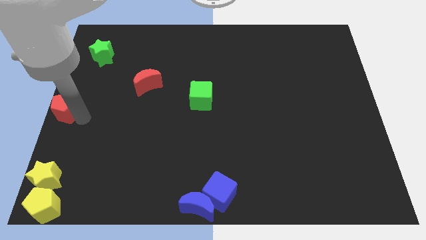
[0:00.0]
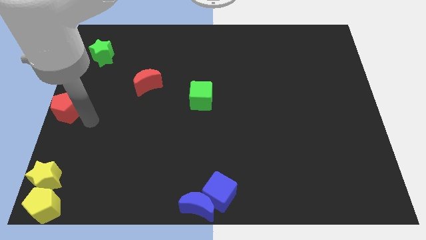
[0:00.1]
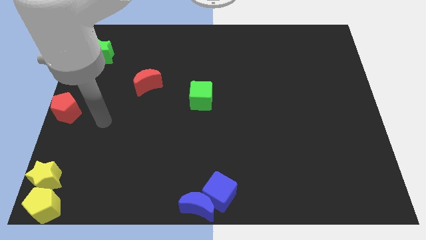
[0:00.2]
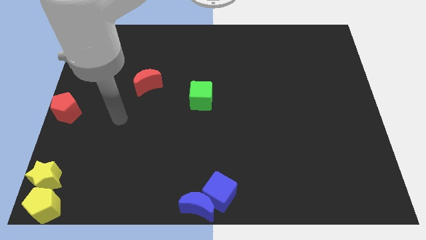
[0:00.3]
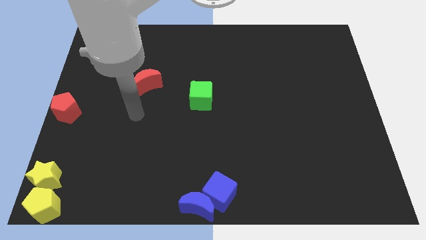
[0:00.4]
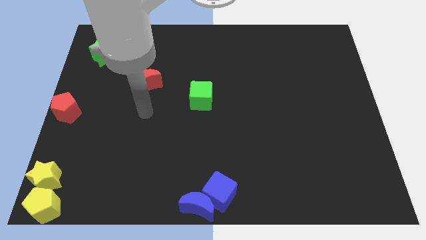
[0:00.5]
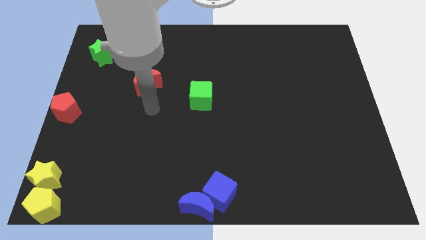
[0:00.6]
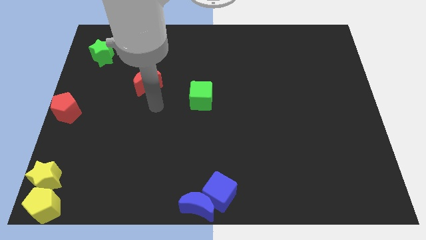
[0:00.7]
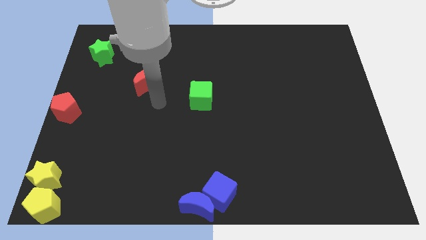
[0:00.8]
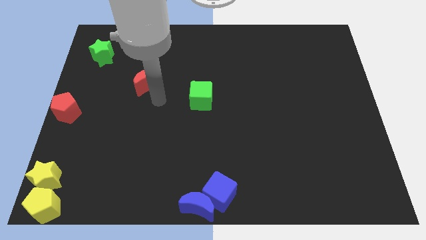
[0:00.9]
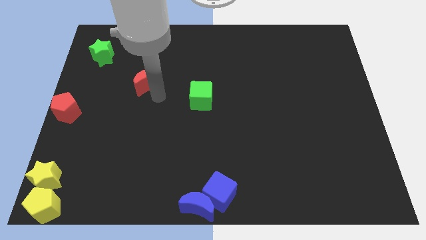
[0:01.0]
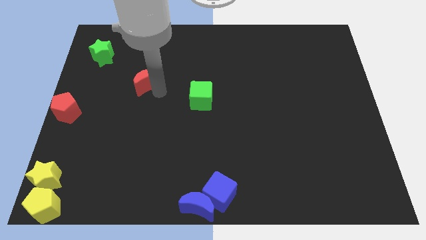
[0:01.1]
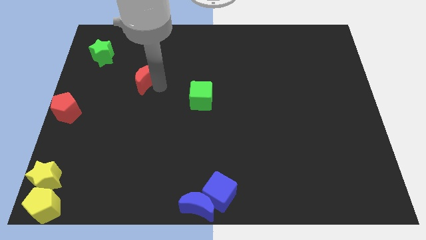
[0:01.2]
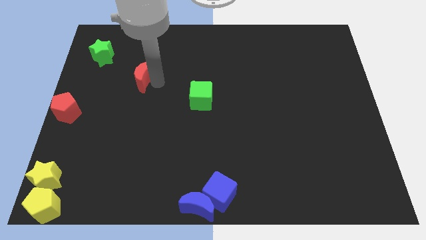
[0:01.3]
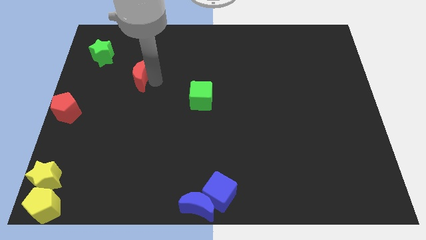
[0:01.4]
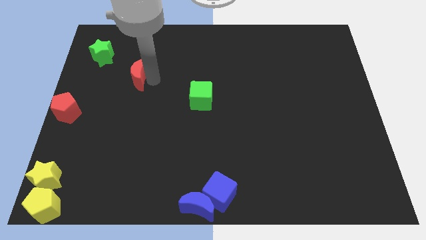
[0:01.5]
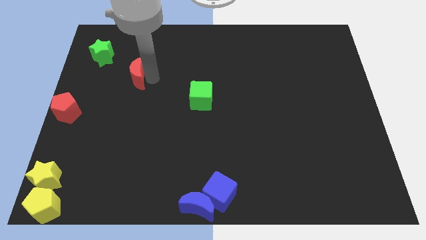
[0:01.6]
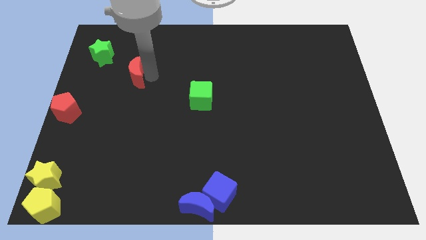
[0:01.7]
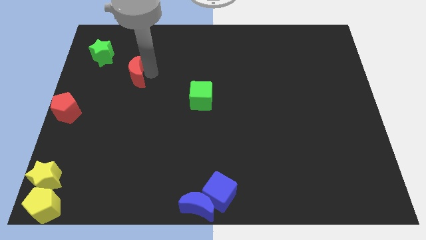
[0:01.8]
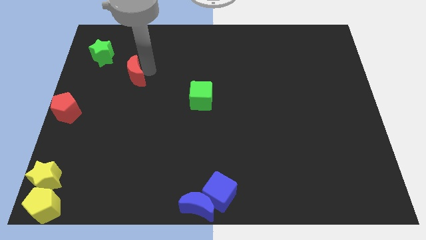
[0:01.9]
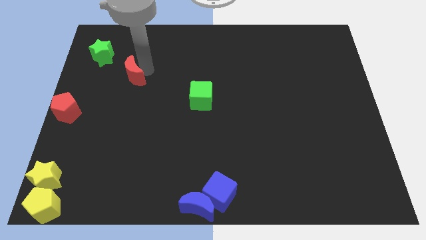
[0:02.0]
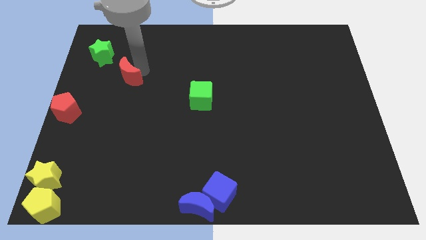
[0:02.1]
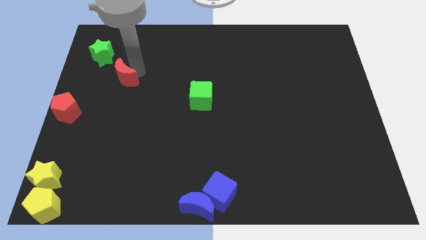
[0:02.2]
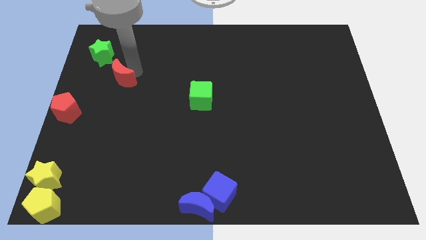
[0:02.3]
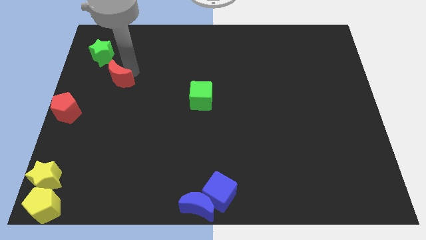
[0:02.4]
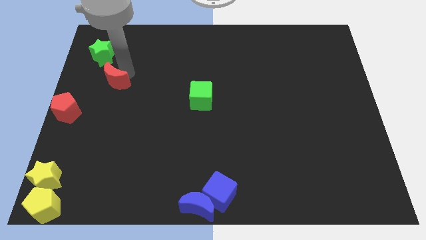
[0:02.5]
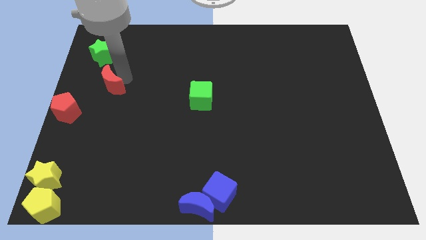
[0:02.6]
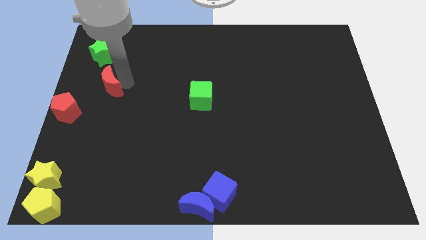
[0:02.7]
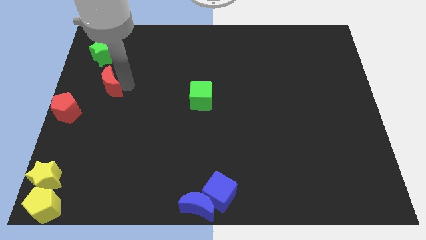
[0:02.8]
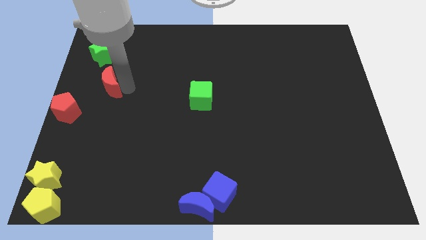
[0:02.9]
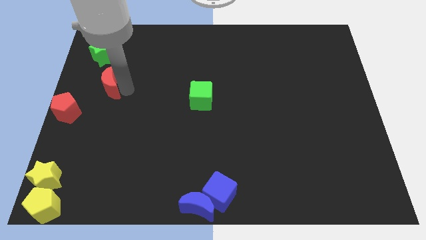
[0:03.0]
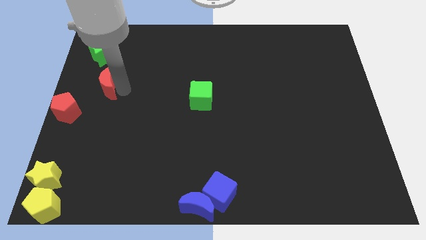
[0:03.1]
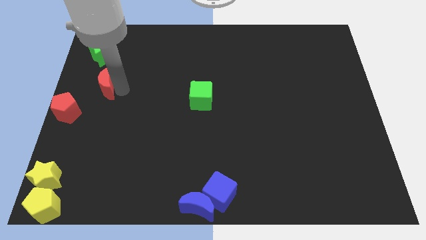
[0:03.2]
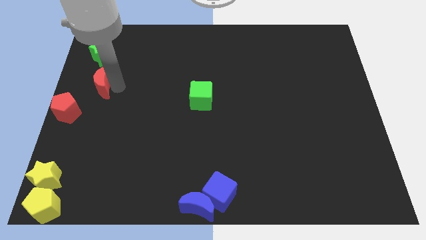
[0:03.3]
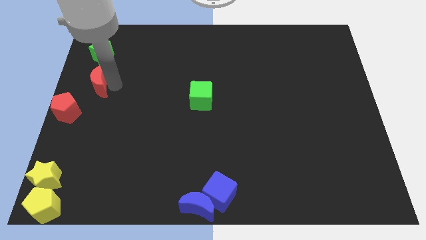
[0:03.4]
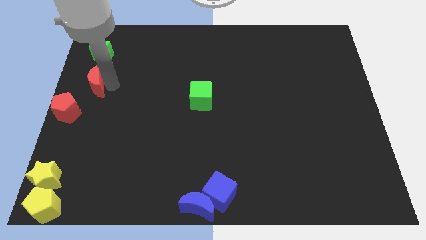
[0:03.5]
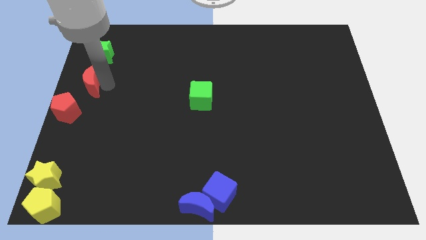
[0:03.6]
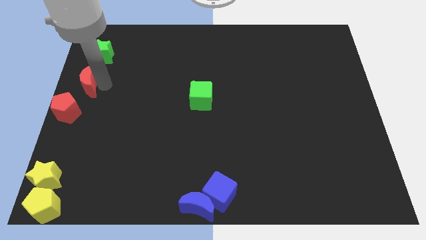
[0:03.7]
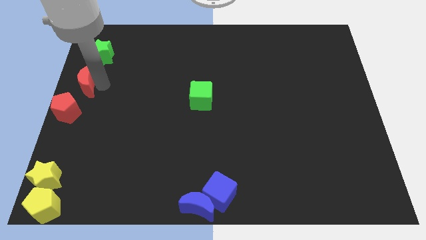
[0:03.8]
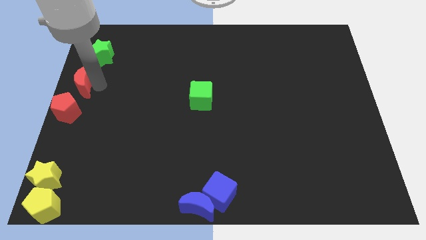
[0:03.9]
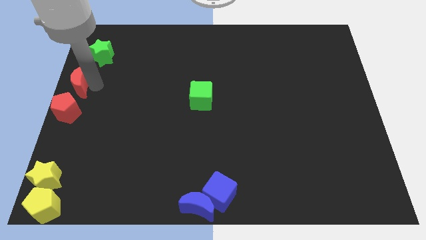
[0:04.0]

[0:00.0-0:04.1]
place the red moon in between the red pentagon and green star

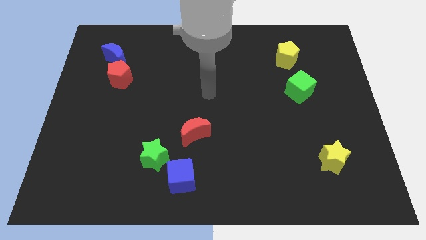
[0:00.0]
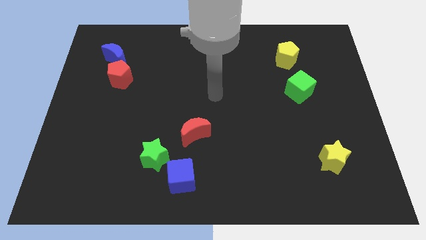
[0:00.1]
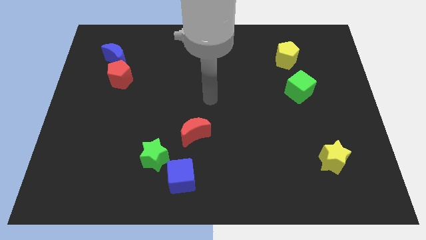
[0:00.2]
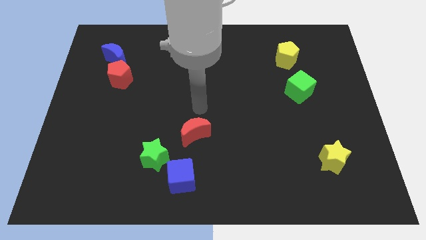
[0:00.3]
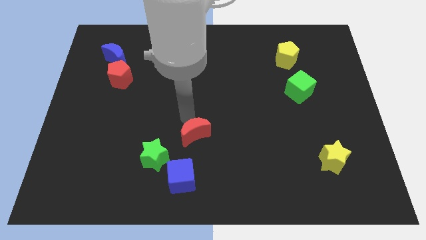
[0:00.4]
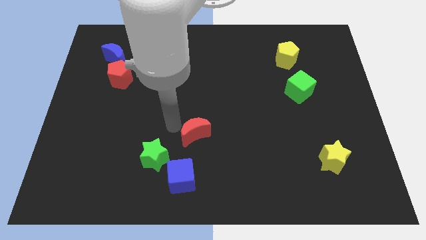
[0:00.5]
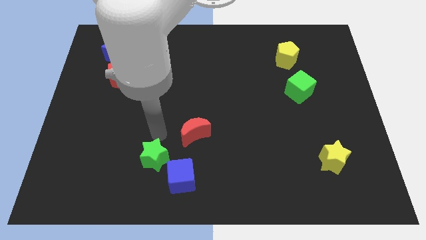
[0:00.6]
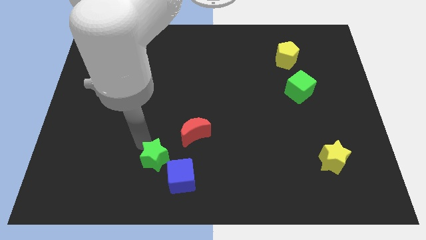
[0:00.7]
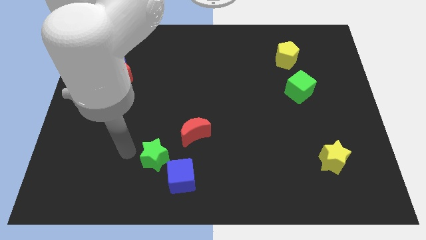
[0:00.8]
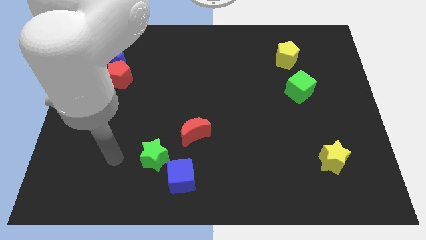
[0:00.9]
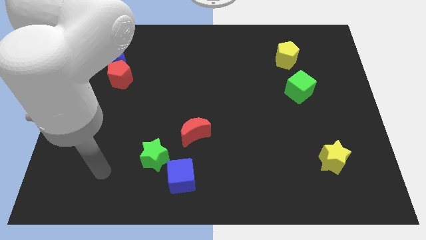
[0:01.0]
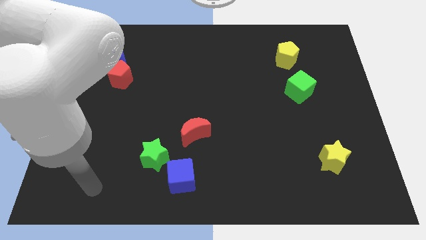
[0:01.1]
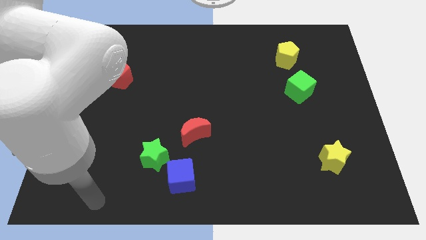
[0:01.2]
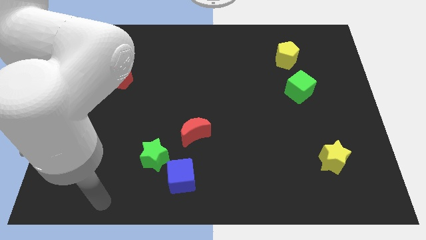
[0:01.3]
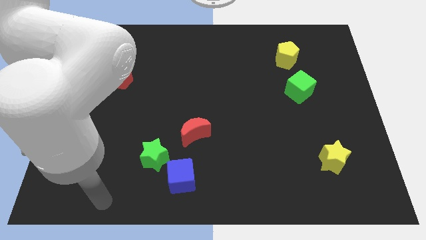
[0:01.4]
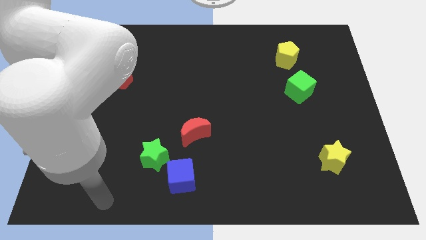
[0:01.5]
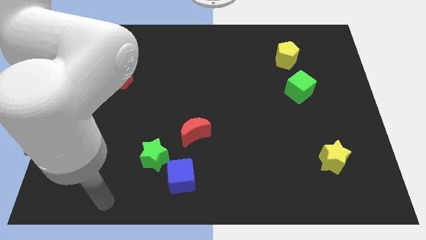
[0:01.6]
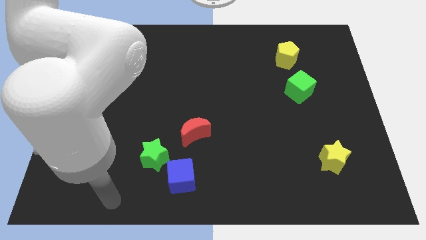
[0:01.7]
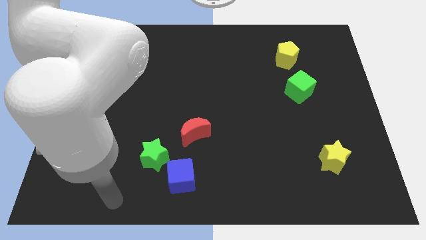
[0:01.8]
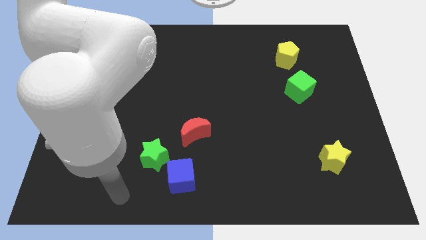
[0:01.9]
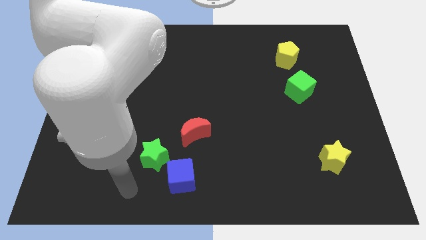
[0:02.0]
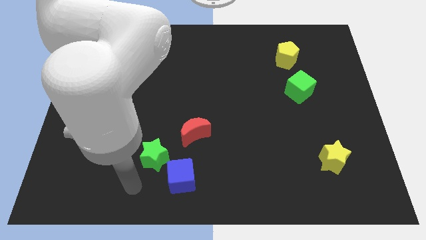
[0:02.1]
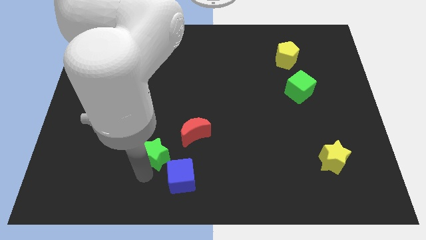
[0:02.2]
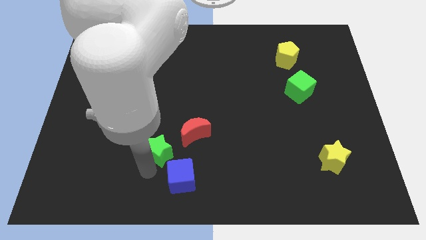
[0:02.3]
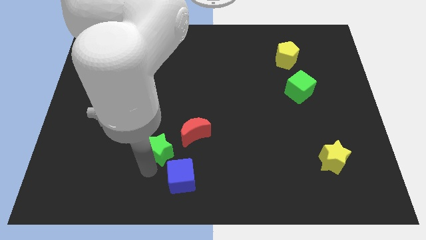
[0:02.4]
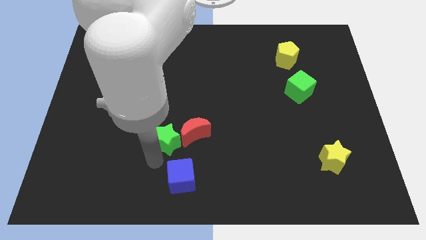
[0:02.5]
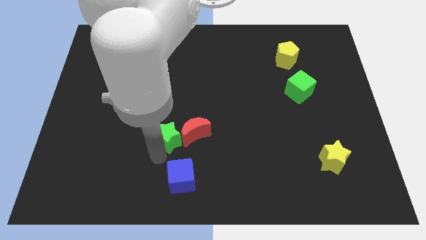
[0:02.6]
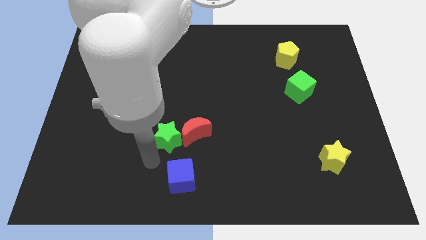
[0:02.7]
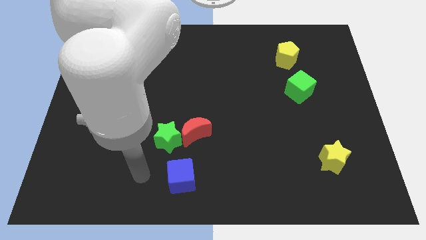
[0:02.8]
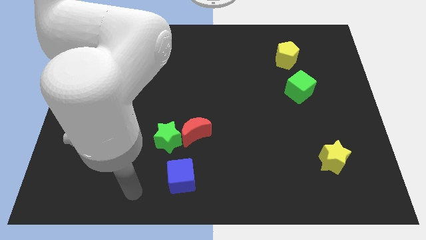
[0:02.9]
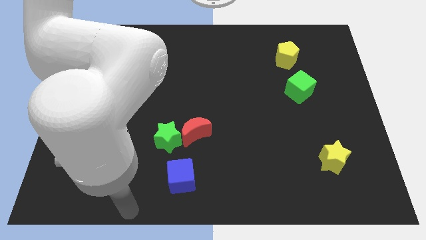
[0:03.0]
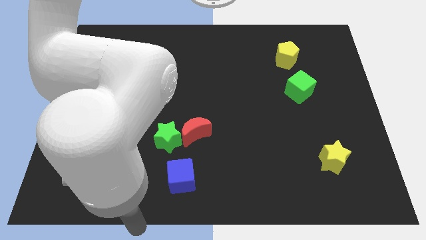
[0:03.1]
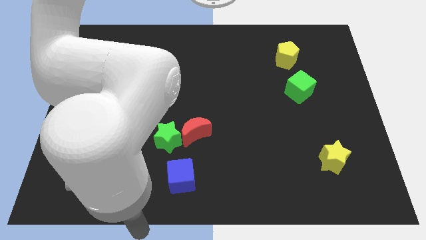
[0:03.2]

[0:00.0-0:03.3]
move green star to the right of red moon

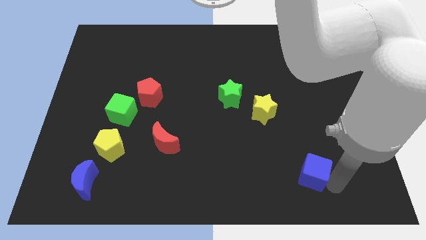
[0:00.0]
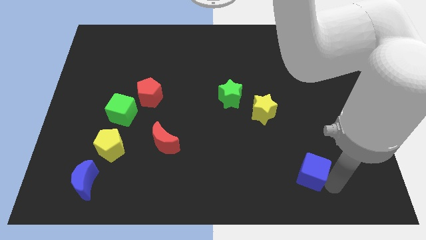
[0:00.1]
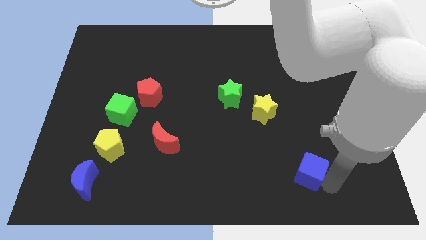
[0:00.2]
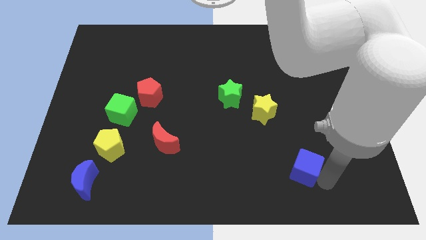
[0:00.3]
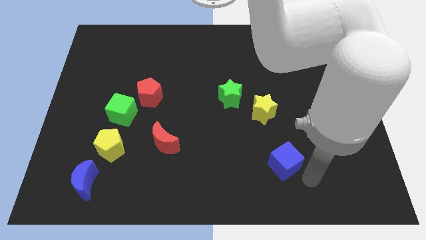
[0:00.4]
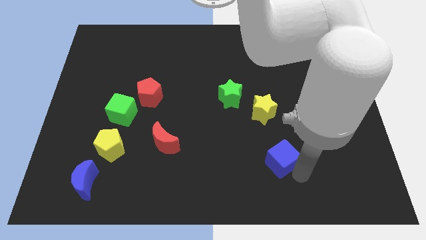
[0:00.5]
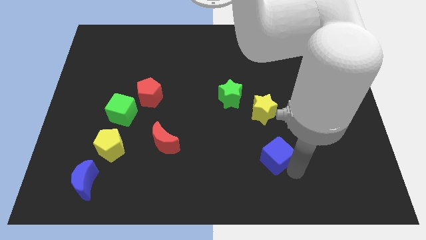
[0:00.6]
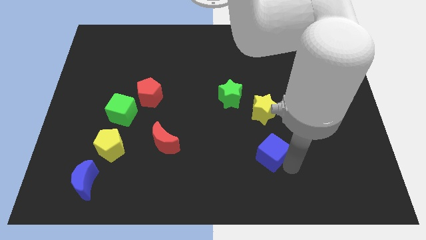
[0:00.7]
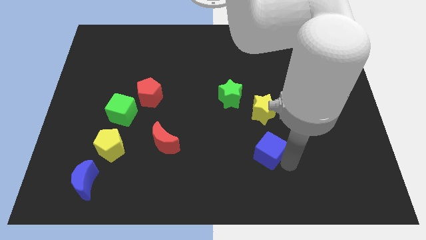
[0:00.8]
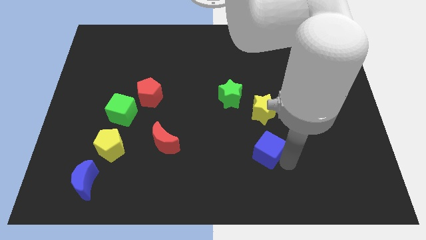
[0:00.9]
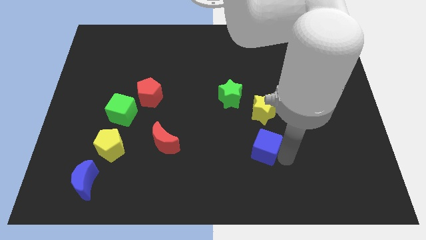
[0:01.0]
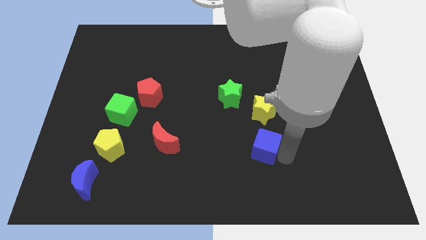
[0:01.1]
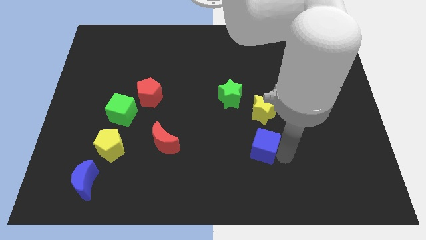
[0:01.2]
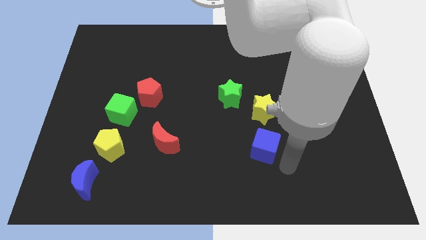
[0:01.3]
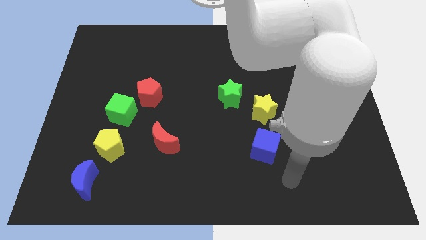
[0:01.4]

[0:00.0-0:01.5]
move the blue cube to the bottom of the yellow star
